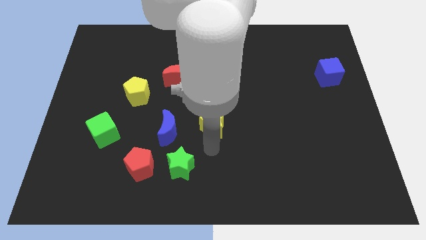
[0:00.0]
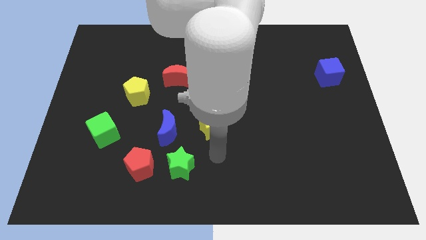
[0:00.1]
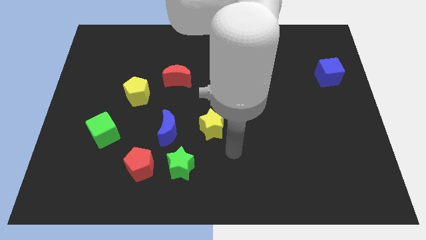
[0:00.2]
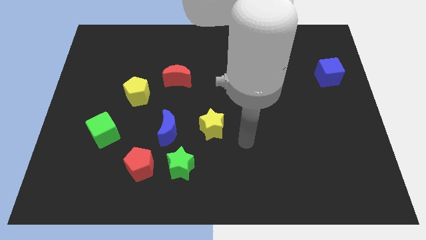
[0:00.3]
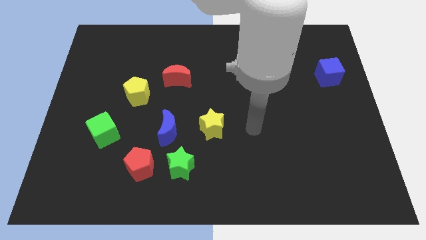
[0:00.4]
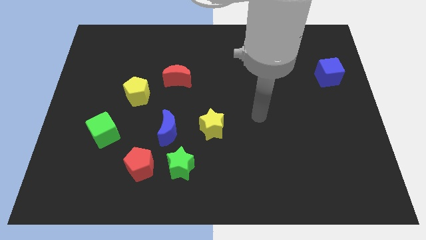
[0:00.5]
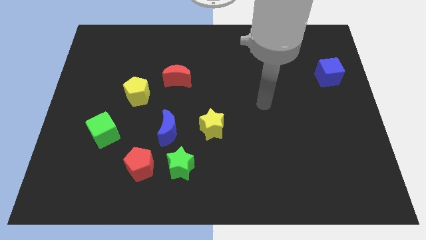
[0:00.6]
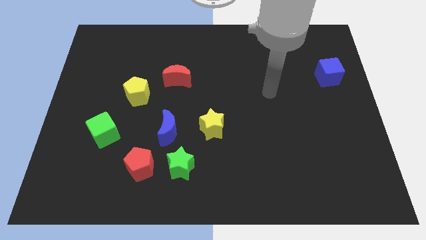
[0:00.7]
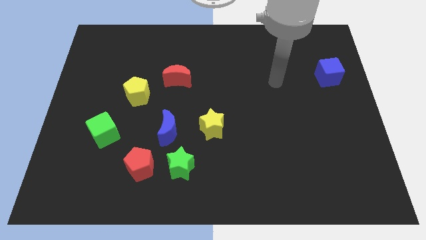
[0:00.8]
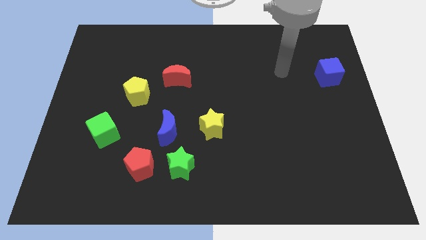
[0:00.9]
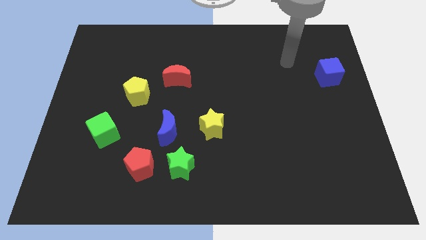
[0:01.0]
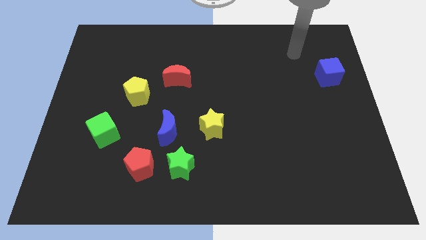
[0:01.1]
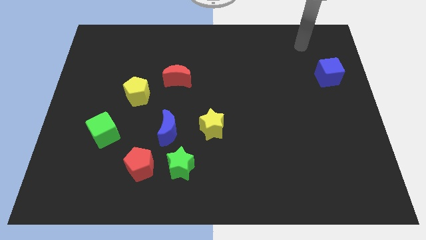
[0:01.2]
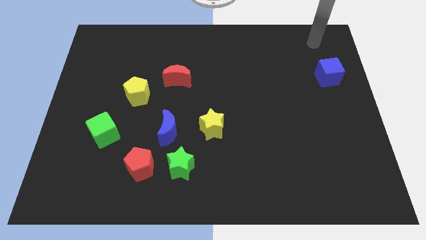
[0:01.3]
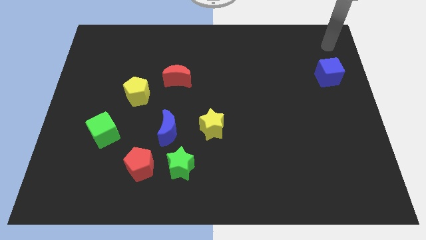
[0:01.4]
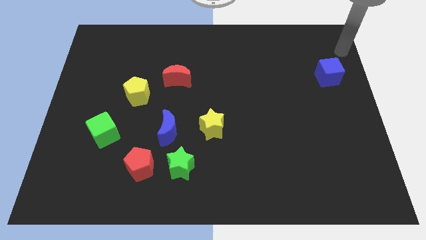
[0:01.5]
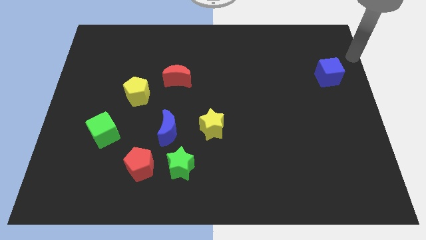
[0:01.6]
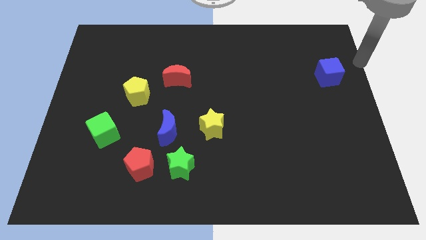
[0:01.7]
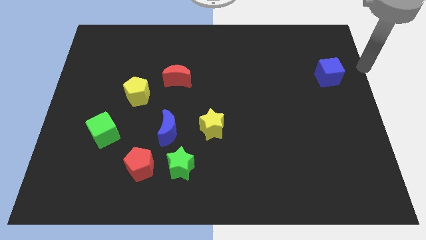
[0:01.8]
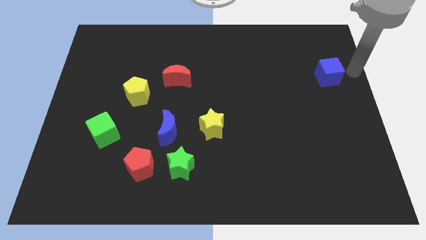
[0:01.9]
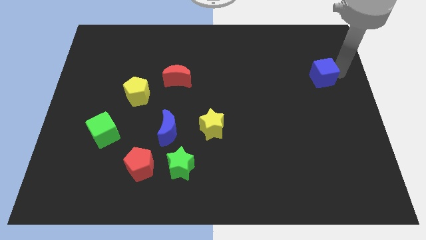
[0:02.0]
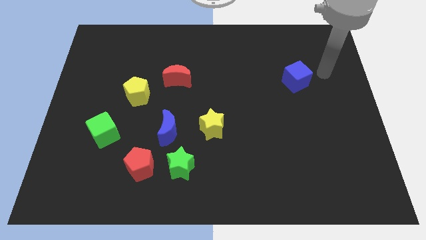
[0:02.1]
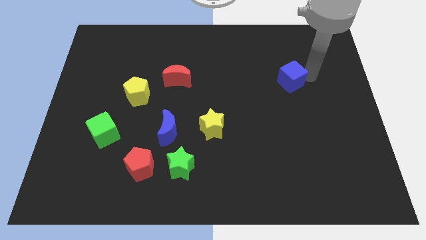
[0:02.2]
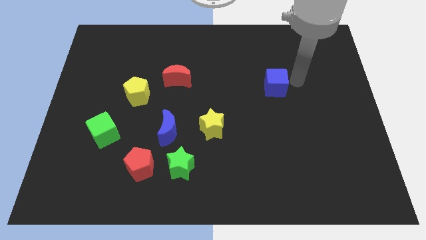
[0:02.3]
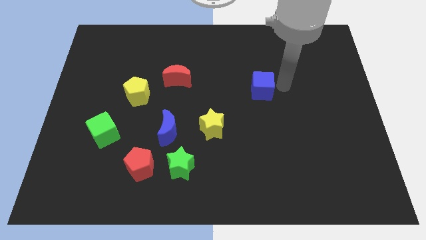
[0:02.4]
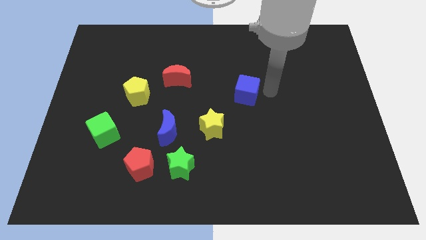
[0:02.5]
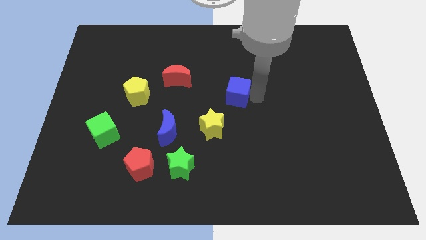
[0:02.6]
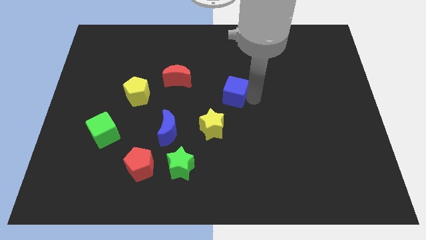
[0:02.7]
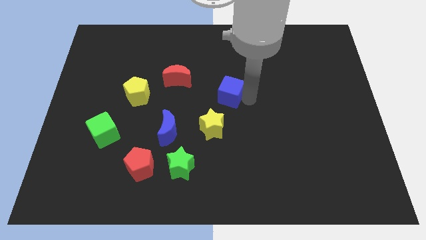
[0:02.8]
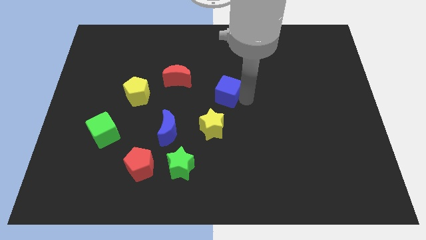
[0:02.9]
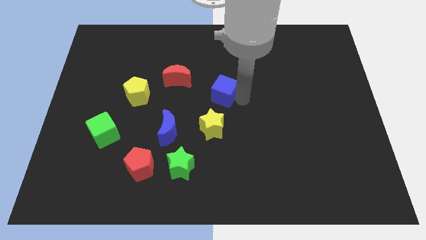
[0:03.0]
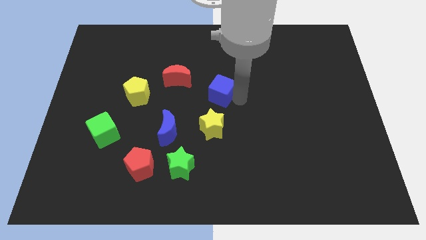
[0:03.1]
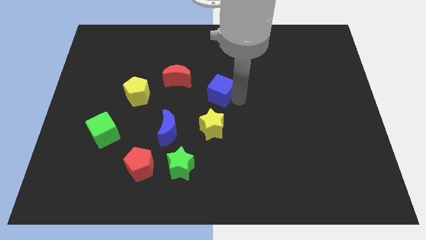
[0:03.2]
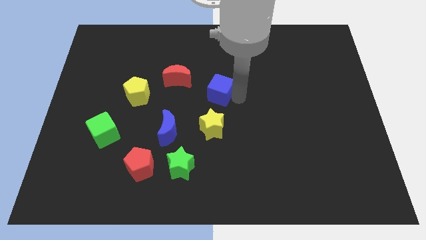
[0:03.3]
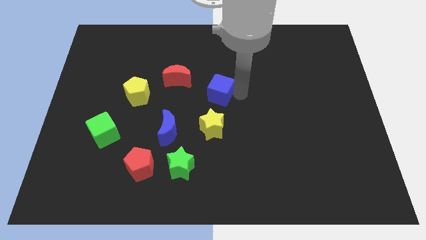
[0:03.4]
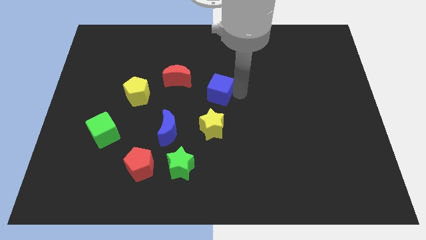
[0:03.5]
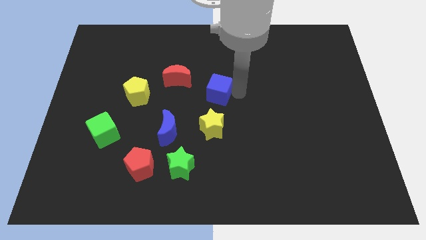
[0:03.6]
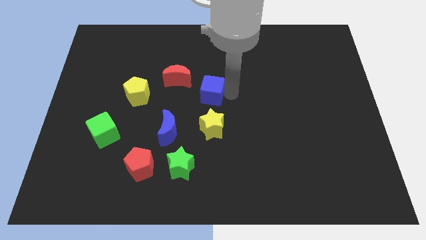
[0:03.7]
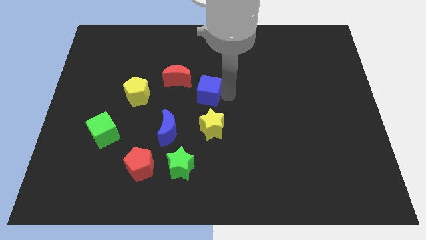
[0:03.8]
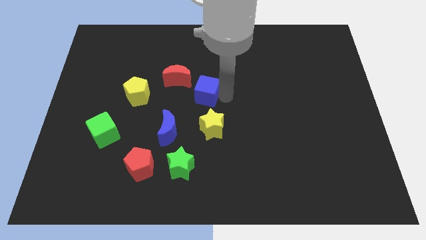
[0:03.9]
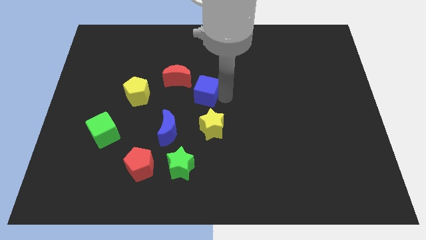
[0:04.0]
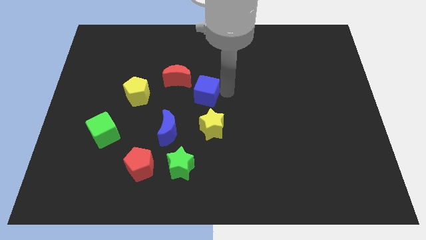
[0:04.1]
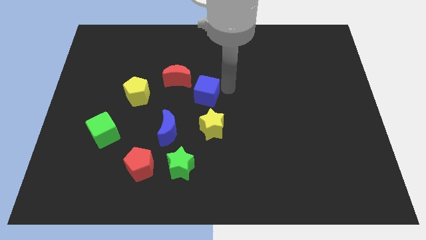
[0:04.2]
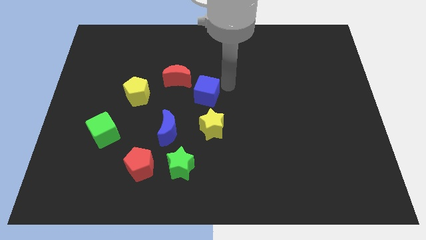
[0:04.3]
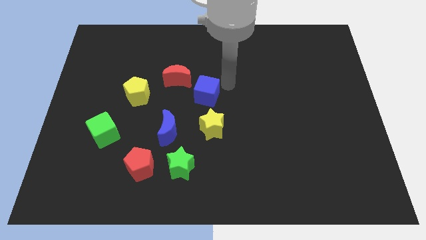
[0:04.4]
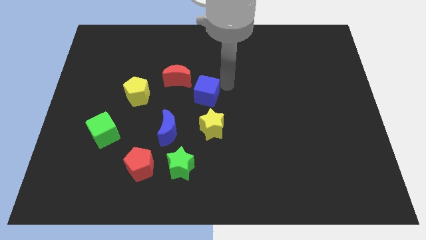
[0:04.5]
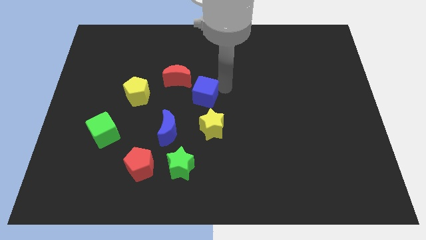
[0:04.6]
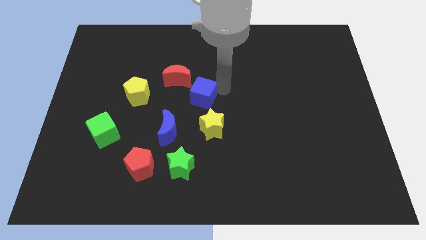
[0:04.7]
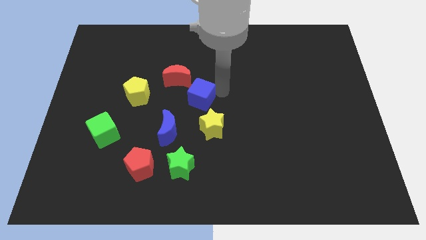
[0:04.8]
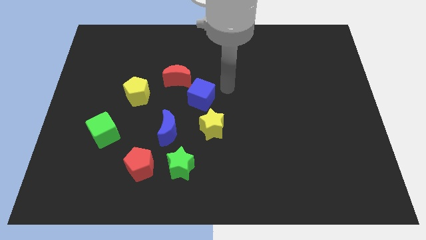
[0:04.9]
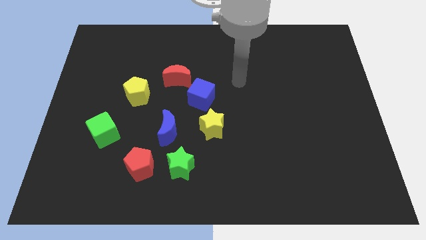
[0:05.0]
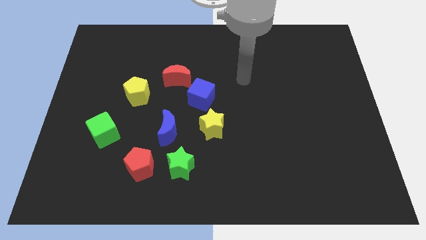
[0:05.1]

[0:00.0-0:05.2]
place the blue cube at the center to form a circle

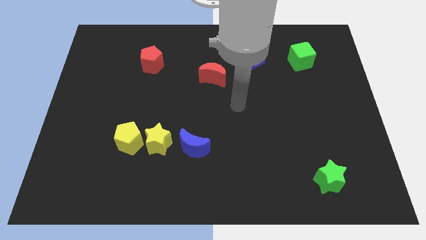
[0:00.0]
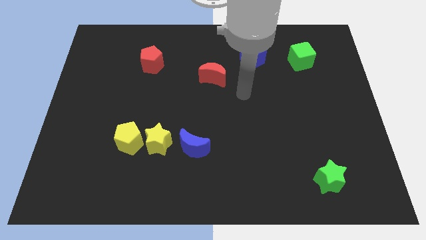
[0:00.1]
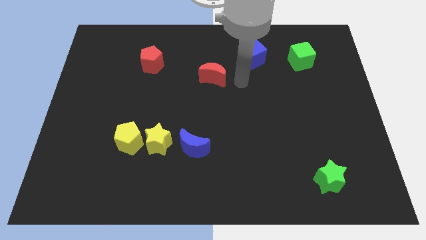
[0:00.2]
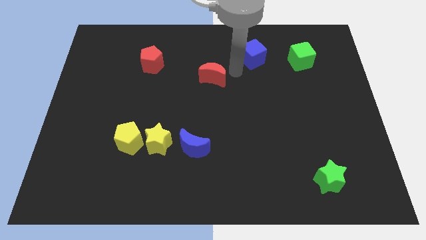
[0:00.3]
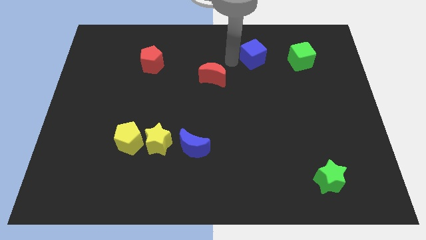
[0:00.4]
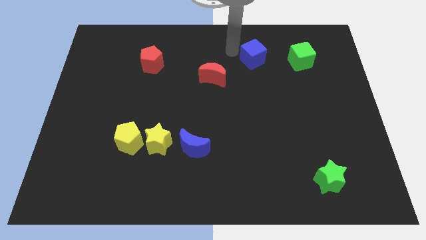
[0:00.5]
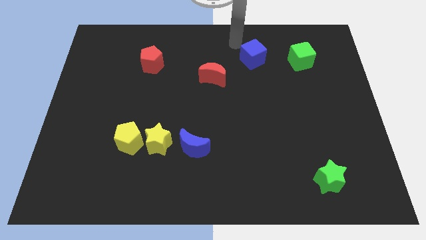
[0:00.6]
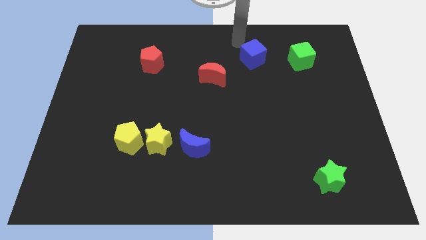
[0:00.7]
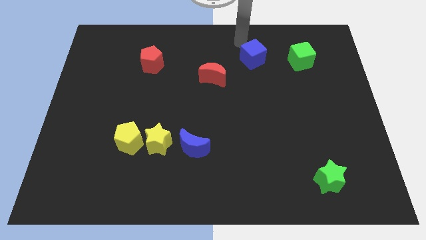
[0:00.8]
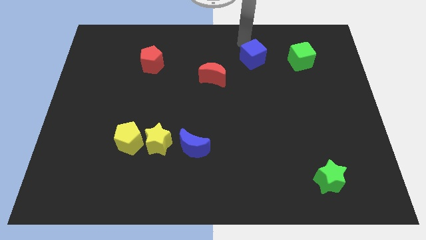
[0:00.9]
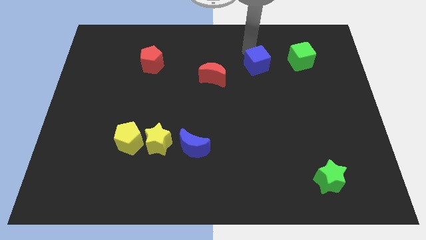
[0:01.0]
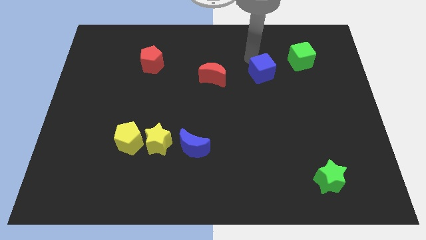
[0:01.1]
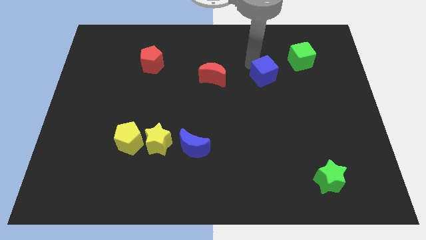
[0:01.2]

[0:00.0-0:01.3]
move the blue cube to the right of the red crescent

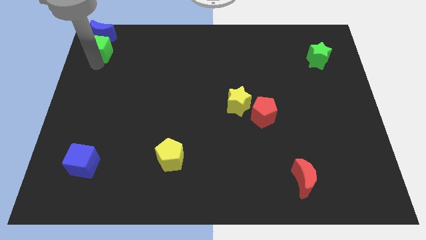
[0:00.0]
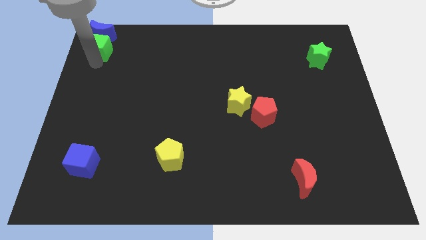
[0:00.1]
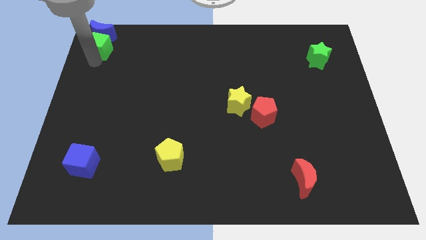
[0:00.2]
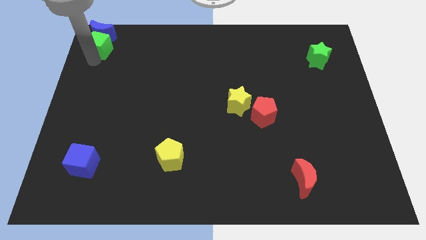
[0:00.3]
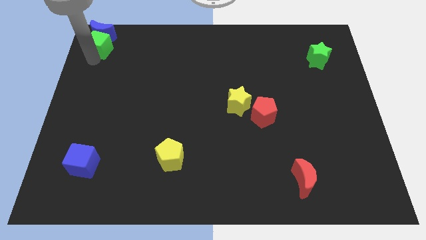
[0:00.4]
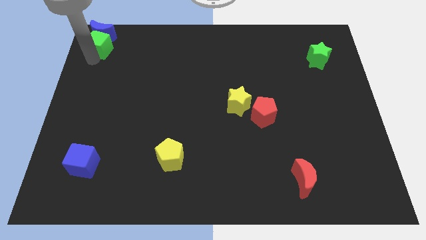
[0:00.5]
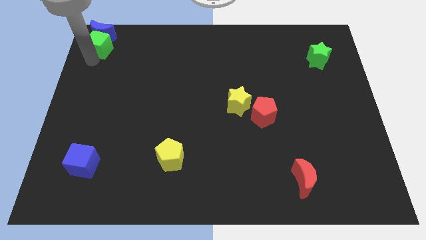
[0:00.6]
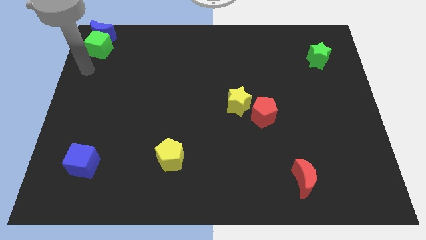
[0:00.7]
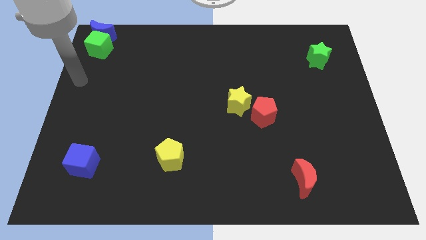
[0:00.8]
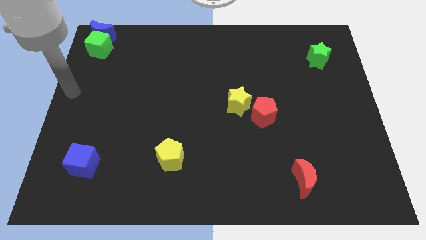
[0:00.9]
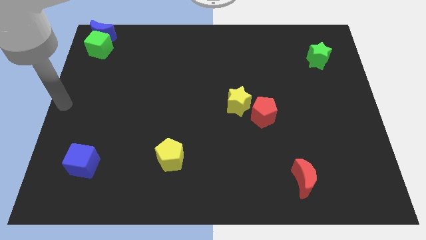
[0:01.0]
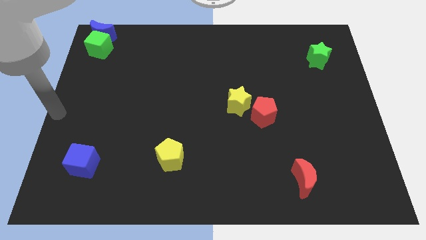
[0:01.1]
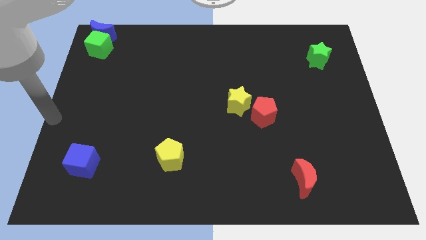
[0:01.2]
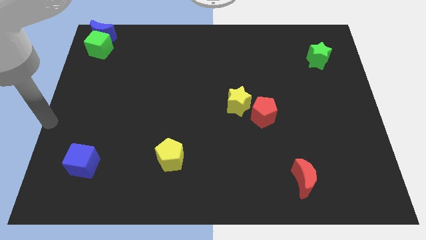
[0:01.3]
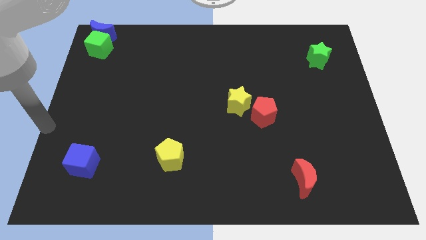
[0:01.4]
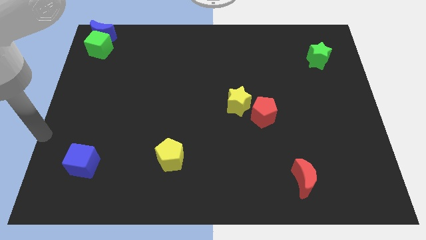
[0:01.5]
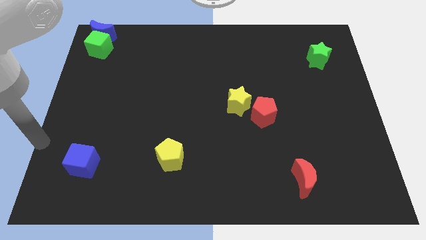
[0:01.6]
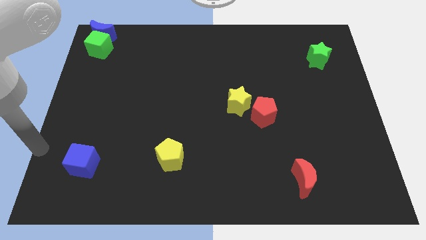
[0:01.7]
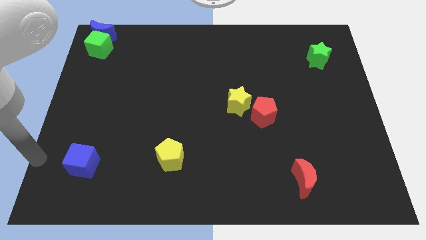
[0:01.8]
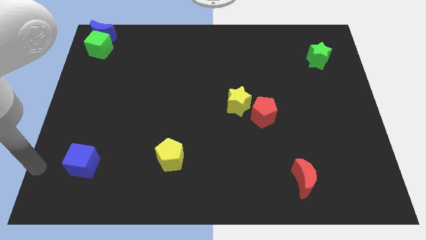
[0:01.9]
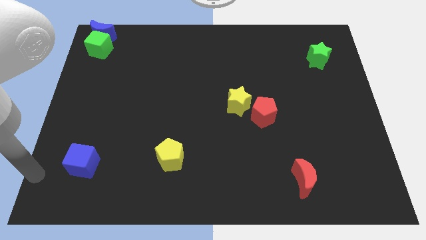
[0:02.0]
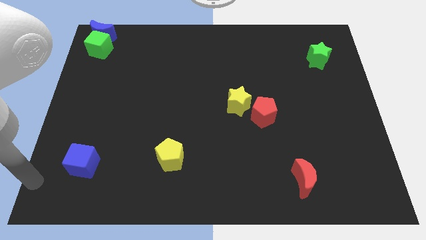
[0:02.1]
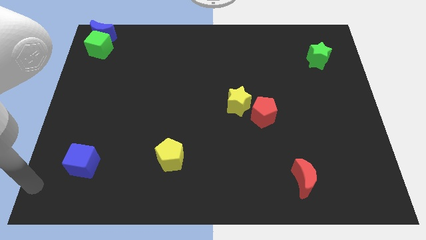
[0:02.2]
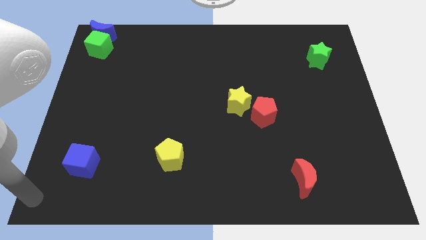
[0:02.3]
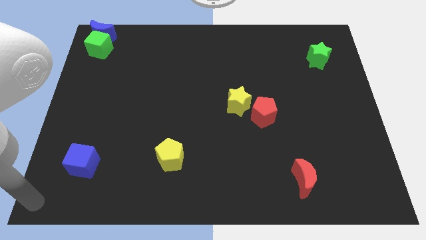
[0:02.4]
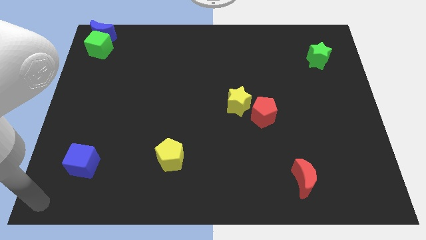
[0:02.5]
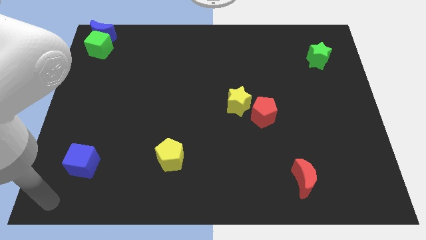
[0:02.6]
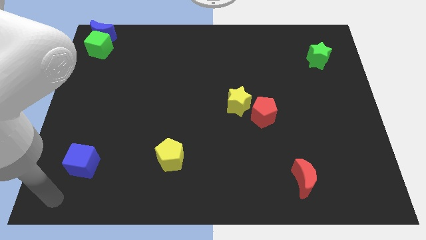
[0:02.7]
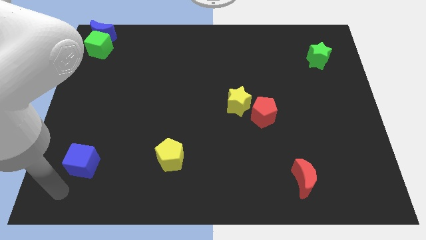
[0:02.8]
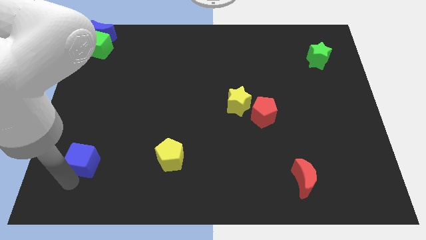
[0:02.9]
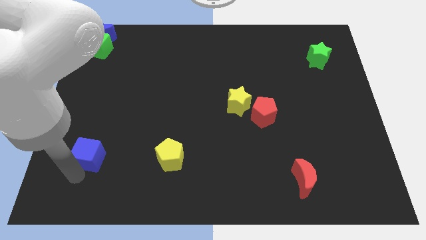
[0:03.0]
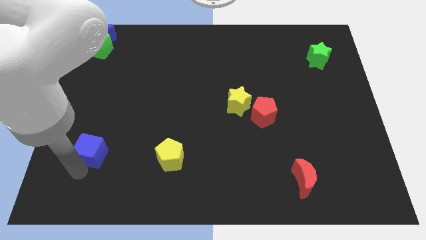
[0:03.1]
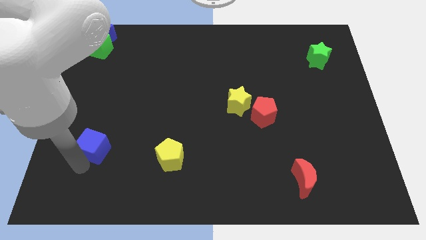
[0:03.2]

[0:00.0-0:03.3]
place blue cube to the left of yellow pentagon
